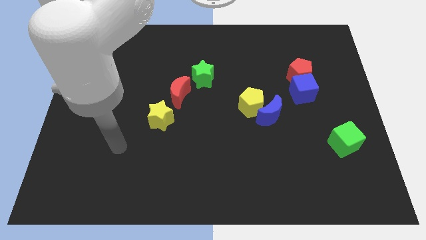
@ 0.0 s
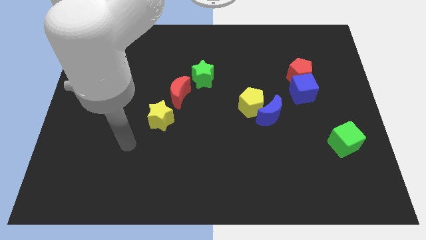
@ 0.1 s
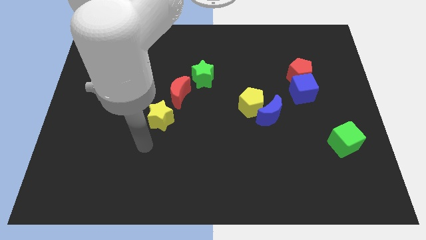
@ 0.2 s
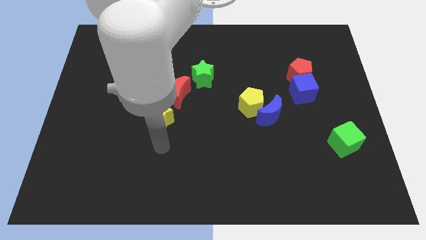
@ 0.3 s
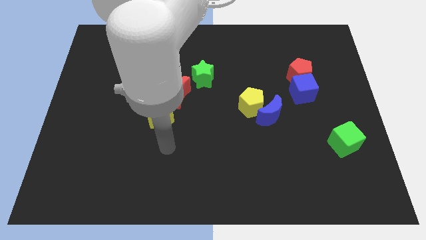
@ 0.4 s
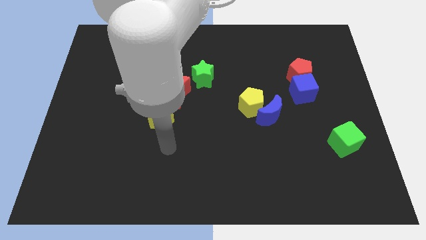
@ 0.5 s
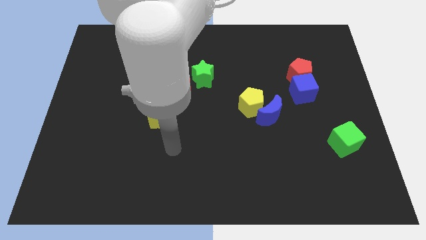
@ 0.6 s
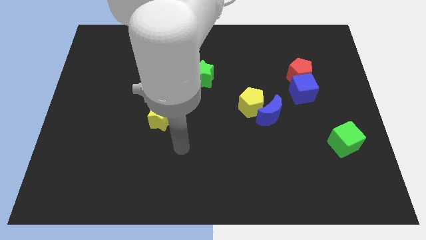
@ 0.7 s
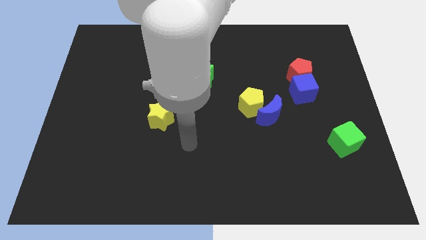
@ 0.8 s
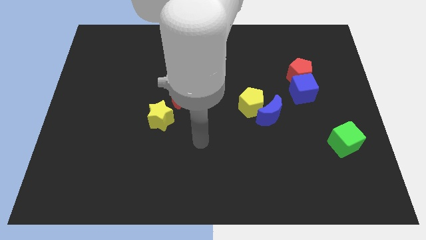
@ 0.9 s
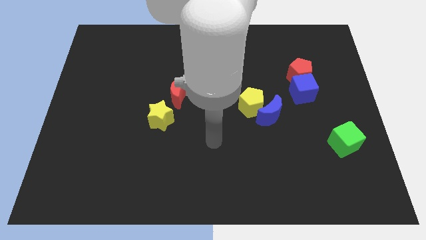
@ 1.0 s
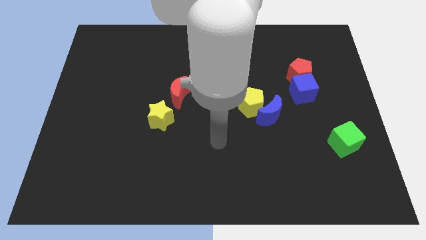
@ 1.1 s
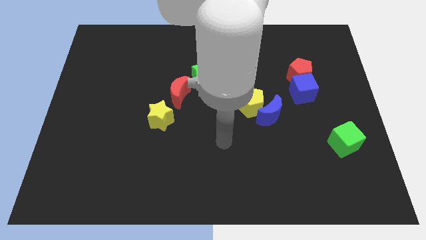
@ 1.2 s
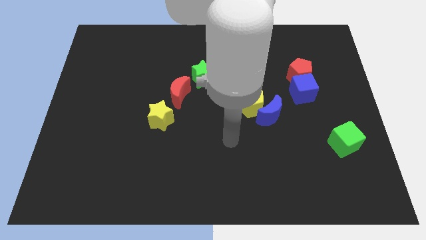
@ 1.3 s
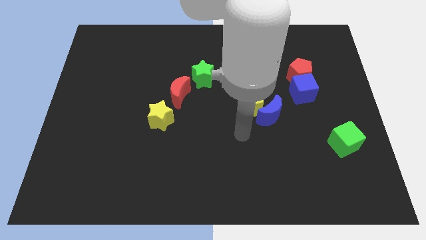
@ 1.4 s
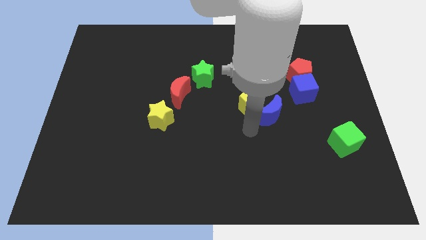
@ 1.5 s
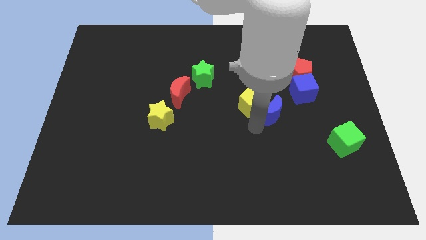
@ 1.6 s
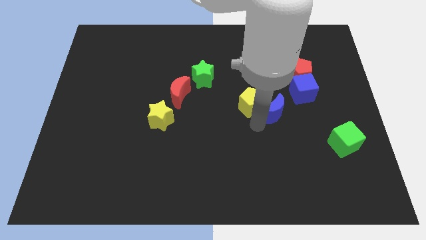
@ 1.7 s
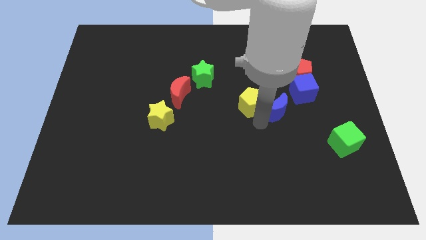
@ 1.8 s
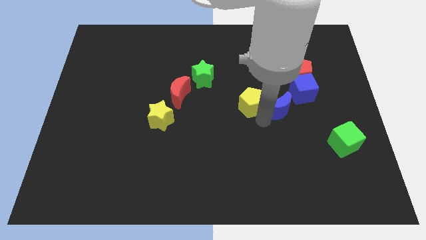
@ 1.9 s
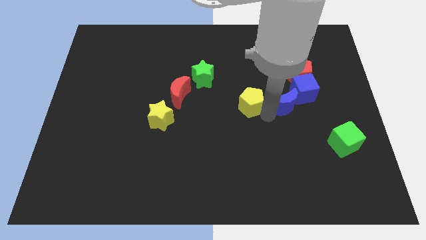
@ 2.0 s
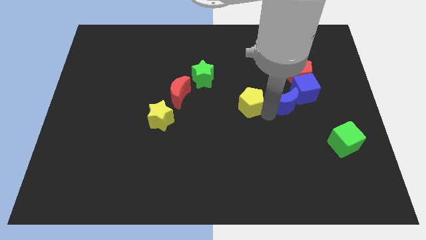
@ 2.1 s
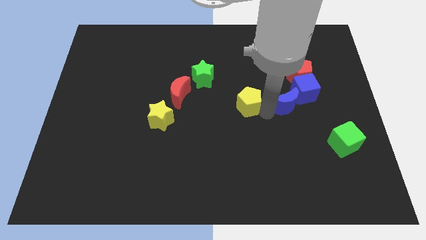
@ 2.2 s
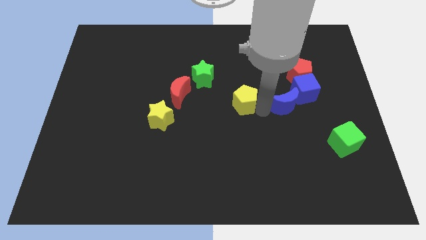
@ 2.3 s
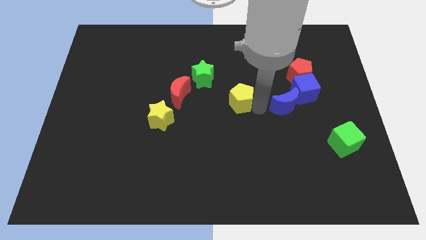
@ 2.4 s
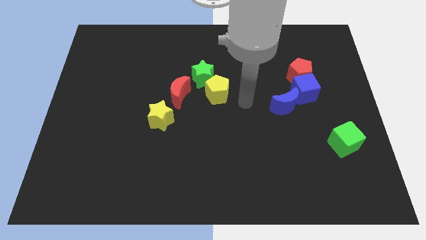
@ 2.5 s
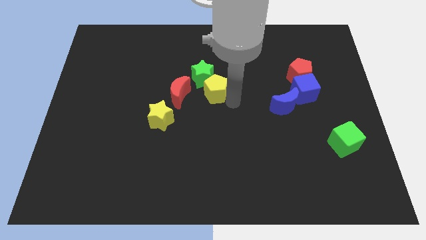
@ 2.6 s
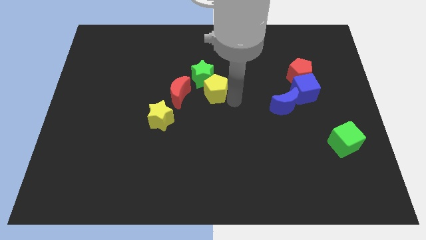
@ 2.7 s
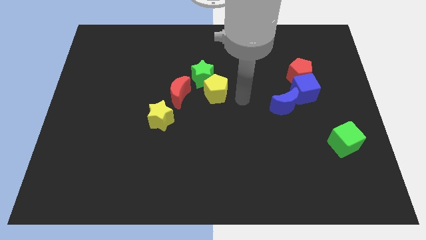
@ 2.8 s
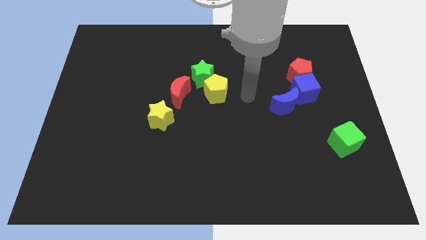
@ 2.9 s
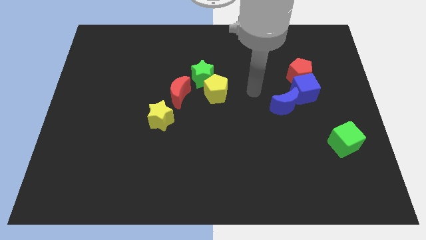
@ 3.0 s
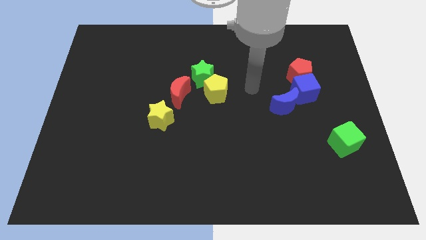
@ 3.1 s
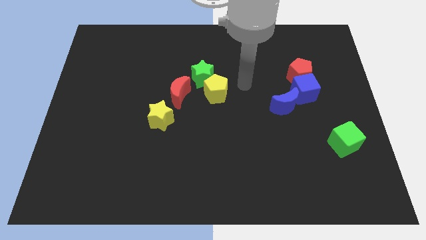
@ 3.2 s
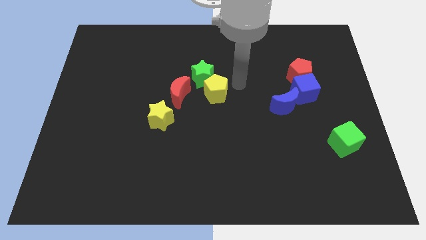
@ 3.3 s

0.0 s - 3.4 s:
separate blue crescent and yellow pentagon from each other

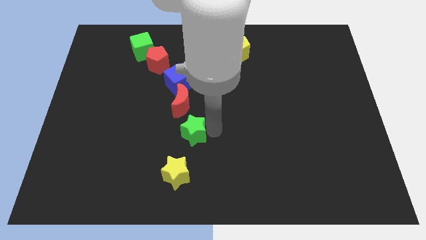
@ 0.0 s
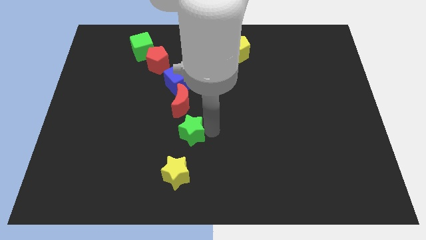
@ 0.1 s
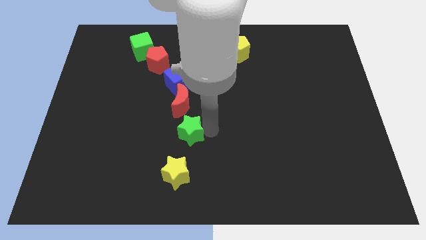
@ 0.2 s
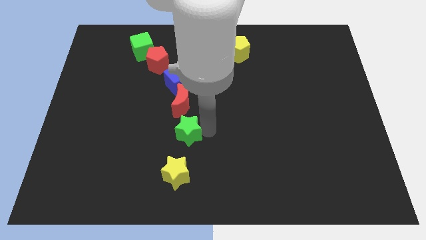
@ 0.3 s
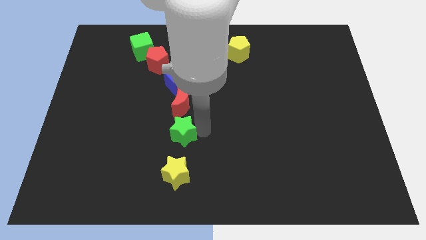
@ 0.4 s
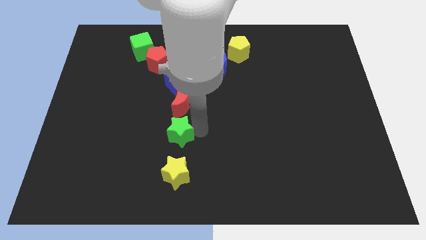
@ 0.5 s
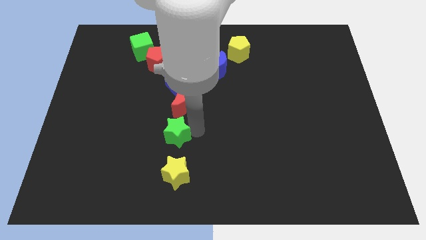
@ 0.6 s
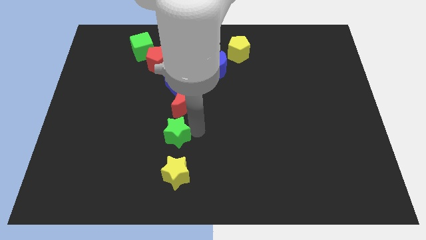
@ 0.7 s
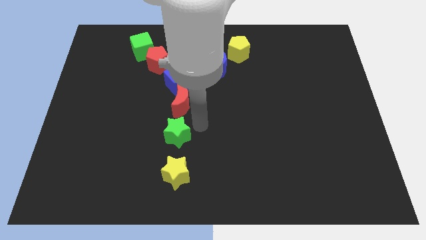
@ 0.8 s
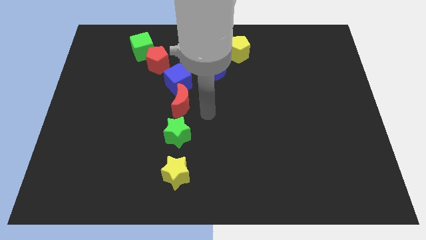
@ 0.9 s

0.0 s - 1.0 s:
place the green star in between the red crescent and the yellow star

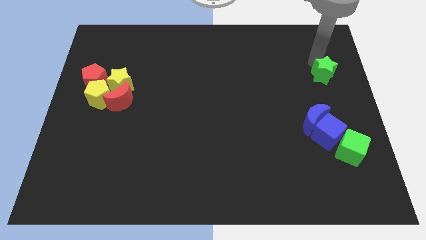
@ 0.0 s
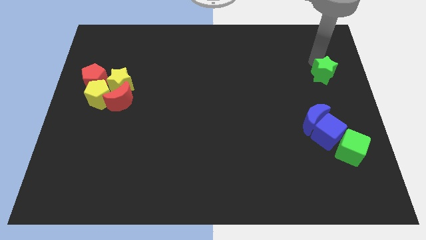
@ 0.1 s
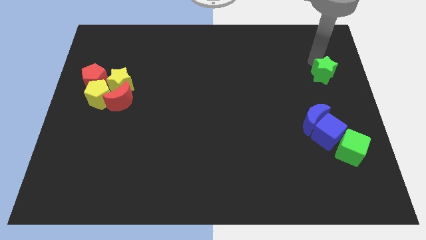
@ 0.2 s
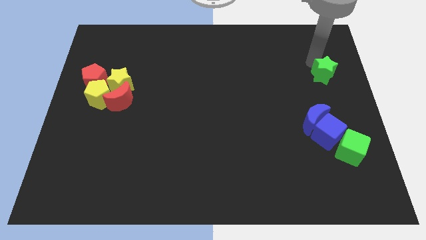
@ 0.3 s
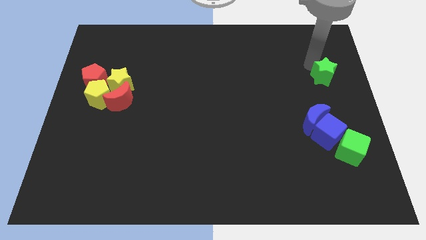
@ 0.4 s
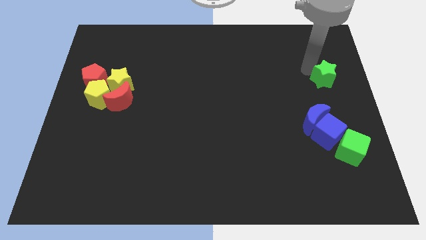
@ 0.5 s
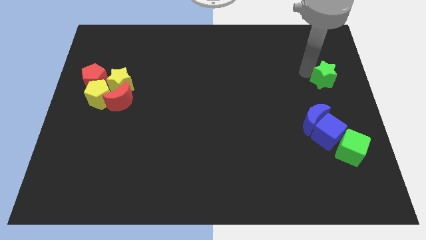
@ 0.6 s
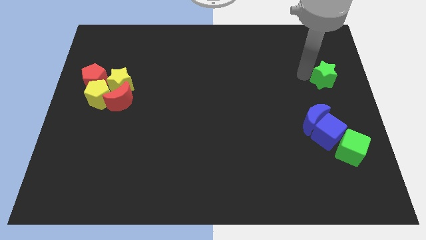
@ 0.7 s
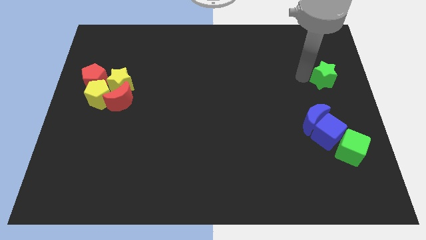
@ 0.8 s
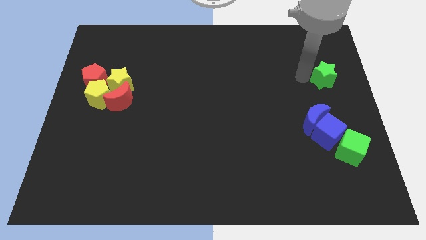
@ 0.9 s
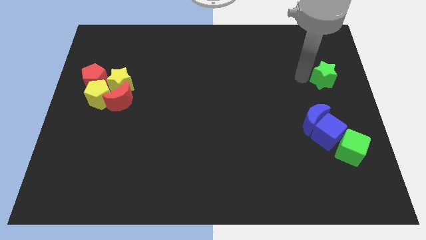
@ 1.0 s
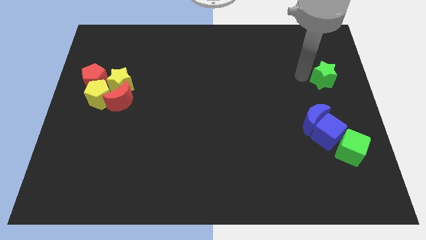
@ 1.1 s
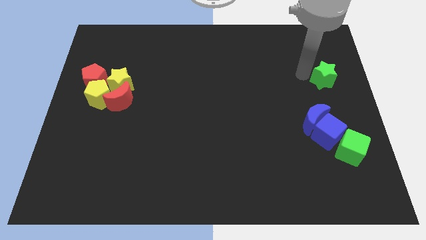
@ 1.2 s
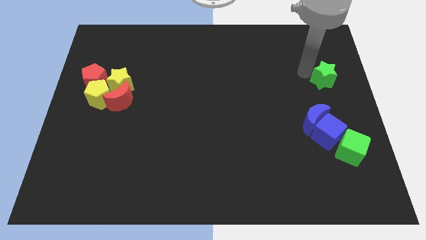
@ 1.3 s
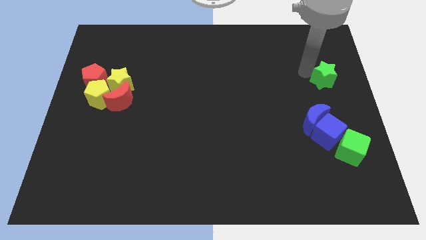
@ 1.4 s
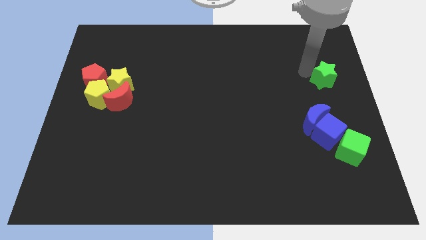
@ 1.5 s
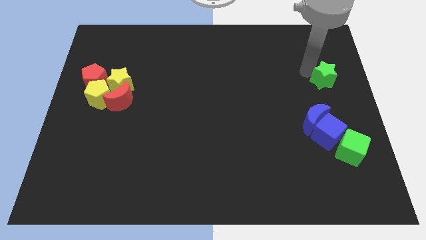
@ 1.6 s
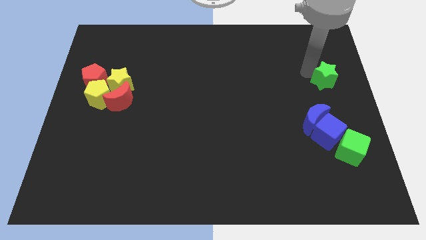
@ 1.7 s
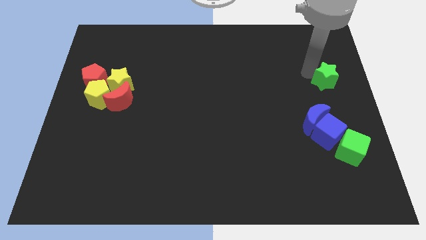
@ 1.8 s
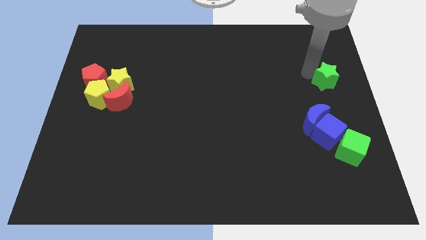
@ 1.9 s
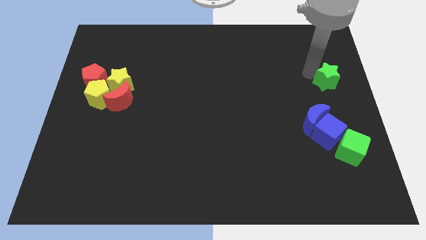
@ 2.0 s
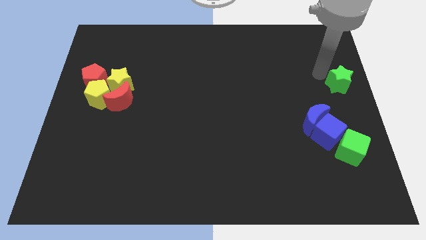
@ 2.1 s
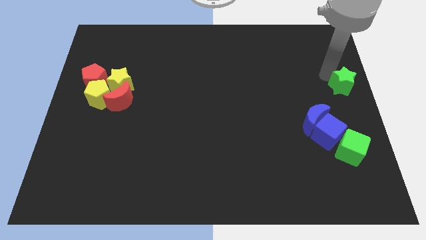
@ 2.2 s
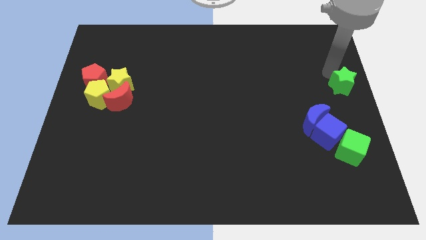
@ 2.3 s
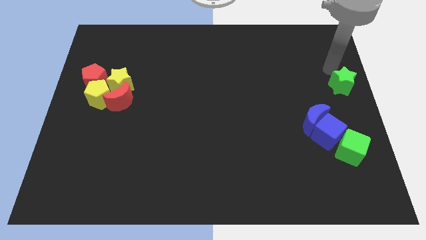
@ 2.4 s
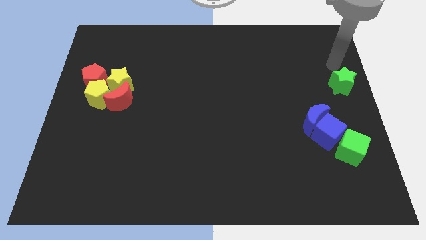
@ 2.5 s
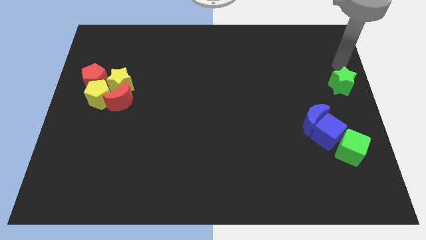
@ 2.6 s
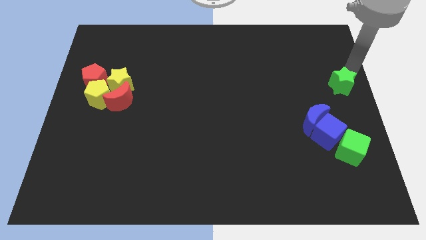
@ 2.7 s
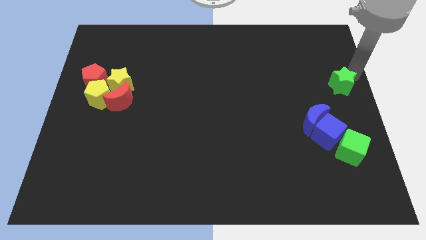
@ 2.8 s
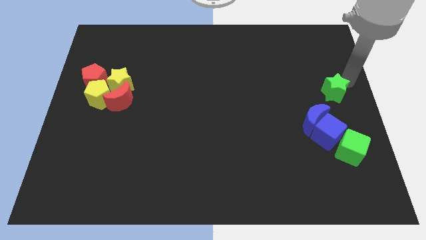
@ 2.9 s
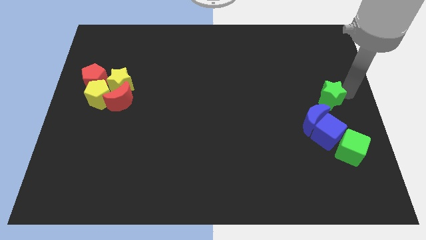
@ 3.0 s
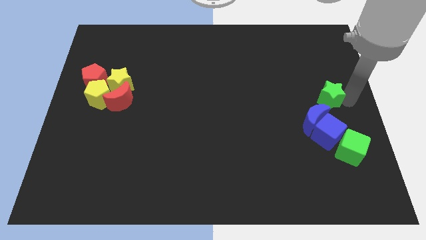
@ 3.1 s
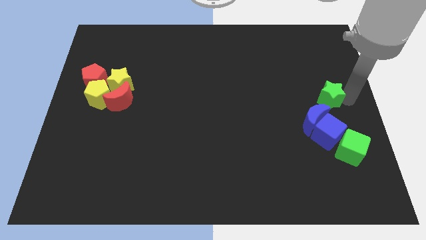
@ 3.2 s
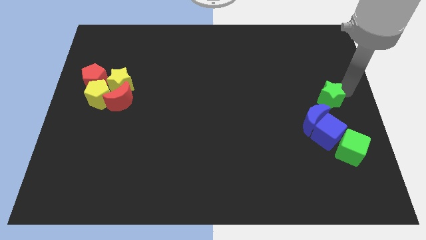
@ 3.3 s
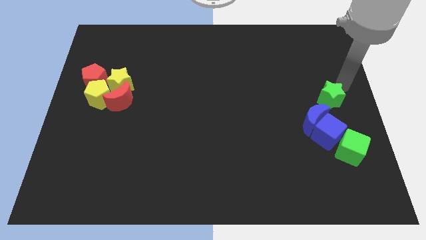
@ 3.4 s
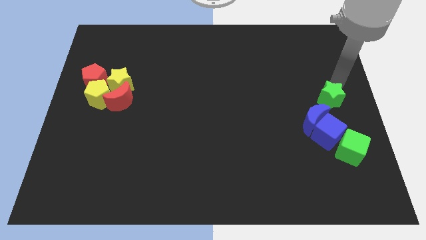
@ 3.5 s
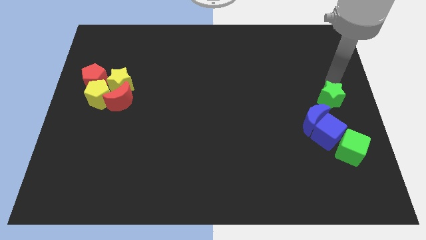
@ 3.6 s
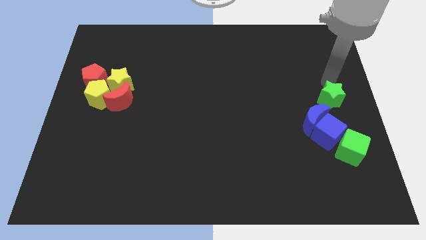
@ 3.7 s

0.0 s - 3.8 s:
place the green star close to the blue crescent

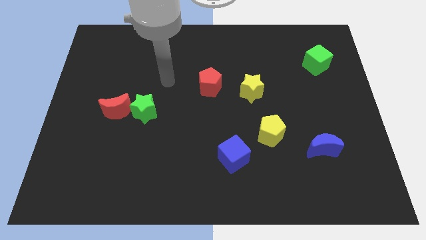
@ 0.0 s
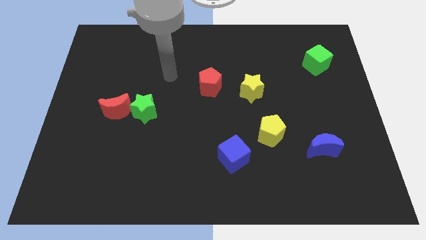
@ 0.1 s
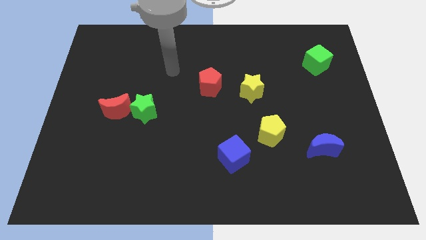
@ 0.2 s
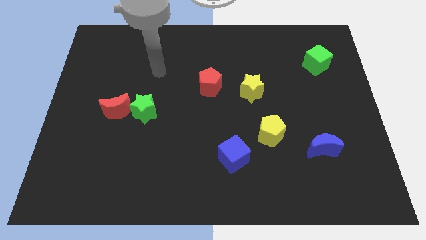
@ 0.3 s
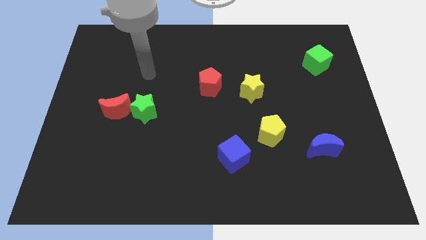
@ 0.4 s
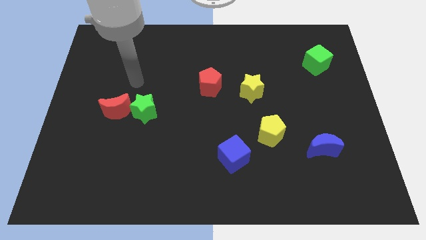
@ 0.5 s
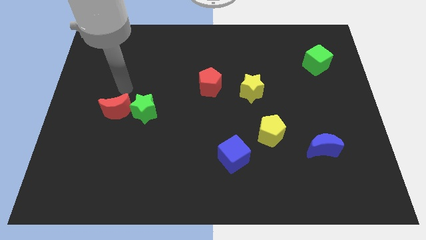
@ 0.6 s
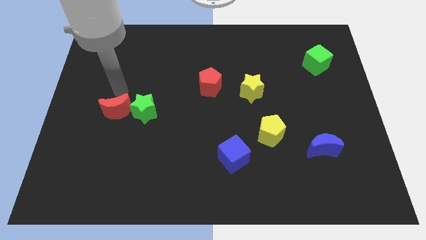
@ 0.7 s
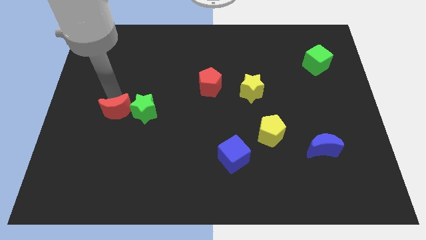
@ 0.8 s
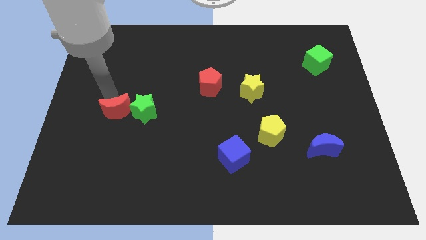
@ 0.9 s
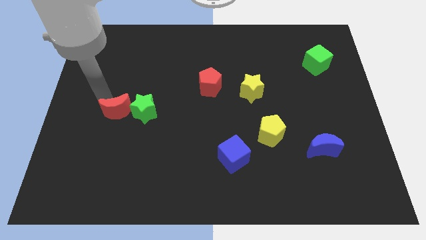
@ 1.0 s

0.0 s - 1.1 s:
move your arm around the red moon
